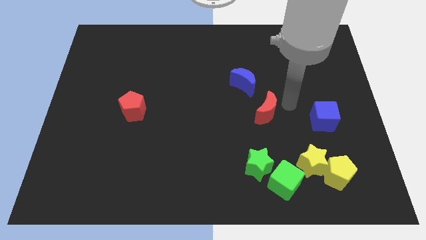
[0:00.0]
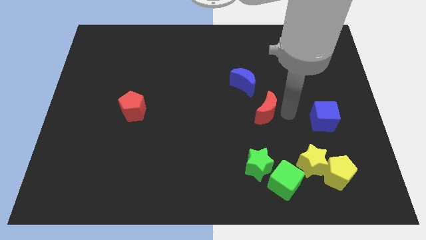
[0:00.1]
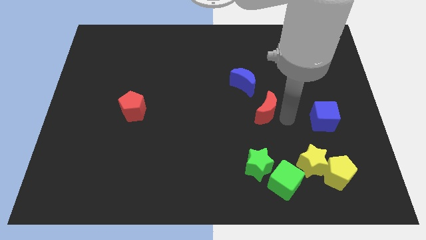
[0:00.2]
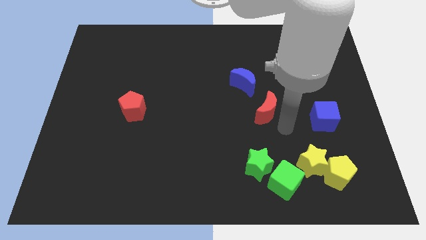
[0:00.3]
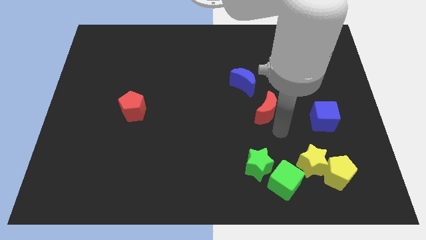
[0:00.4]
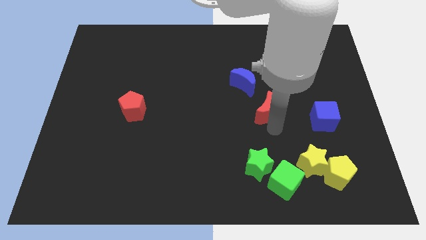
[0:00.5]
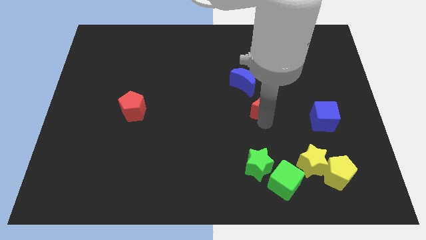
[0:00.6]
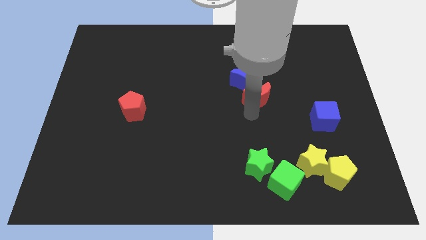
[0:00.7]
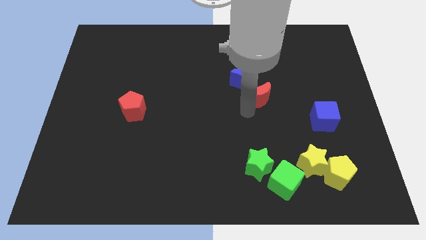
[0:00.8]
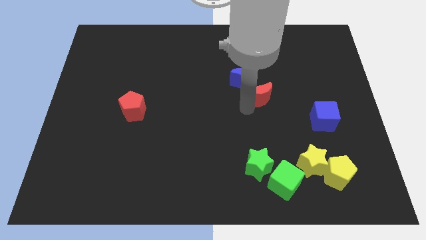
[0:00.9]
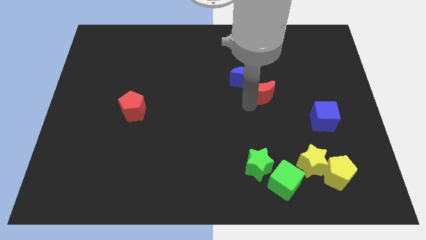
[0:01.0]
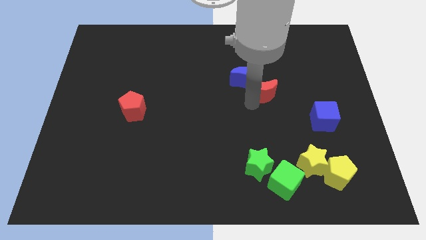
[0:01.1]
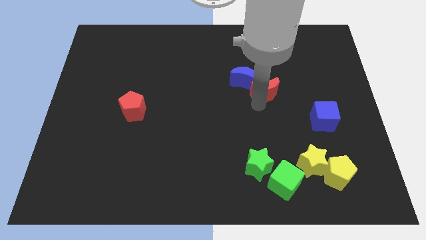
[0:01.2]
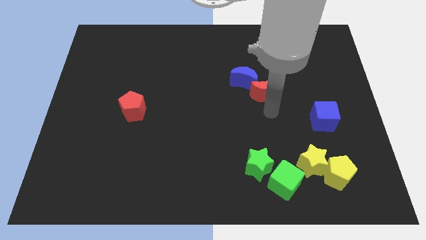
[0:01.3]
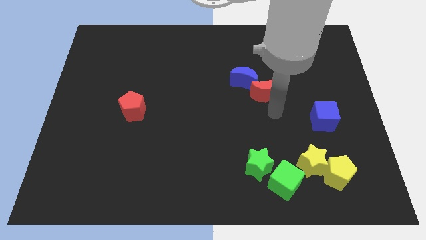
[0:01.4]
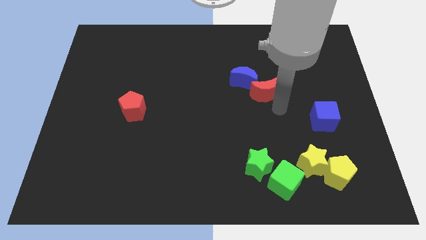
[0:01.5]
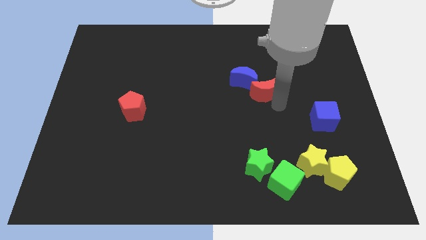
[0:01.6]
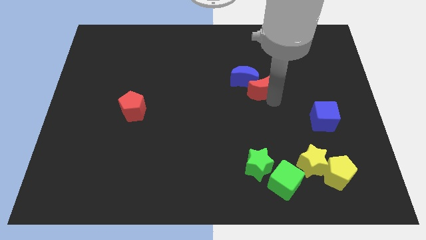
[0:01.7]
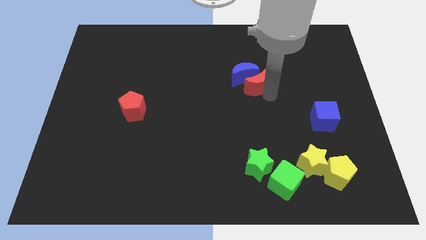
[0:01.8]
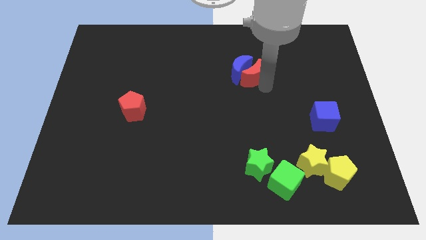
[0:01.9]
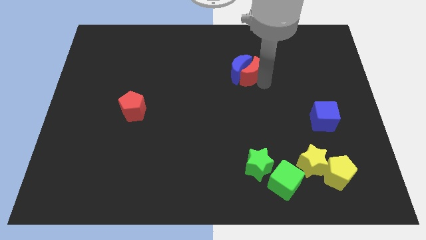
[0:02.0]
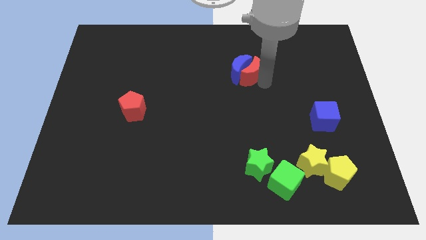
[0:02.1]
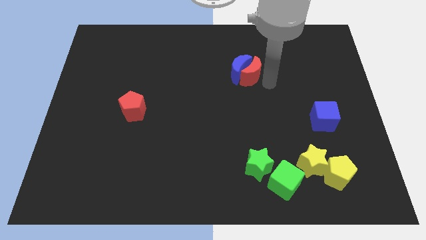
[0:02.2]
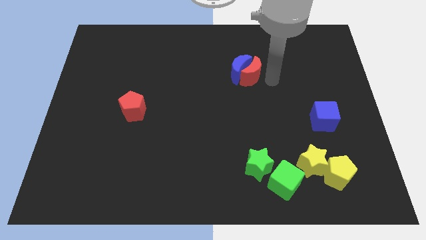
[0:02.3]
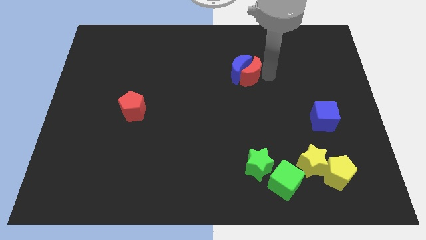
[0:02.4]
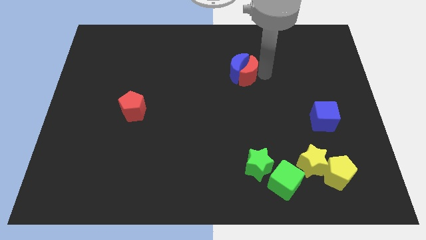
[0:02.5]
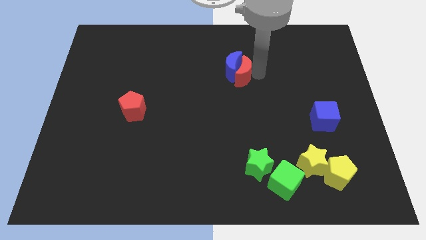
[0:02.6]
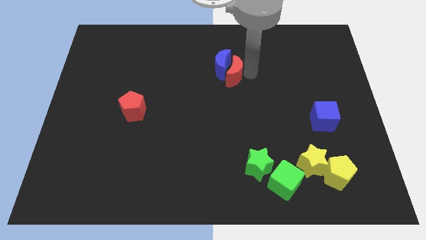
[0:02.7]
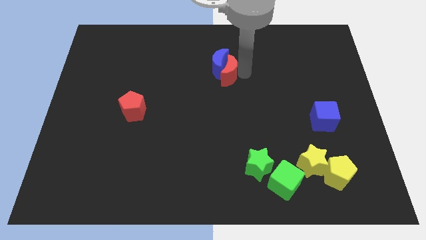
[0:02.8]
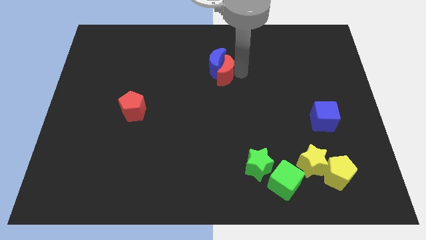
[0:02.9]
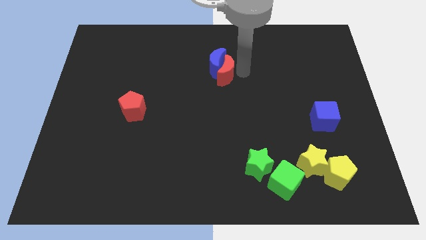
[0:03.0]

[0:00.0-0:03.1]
push the red moon into the blue moon

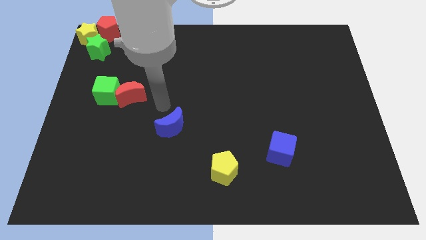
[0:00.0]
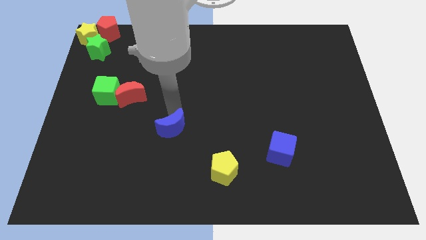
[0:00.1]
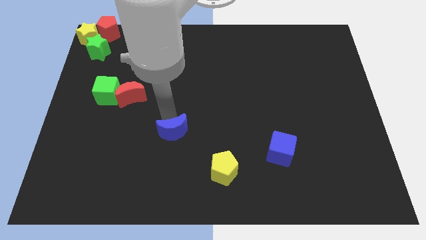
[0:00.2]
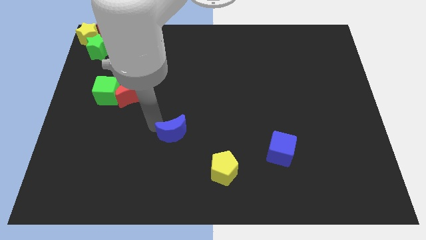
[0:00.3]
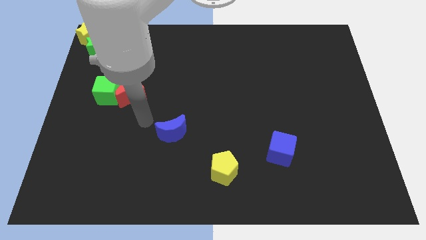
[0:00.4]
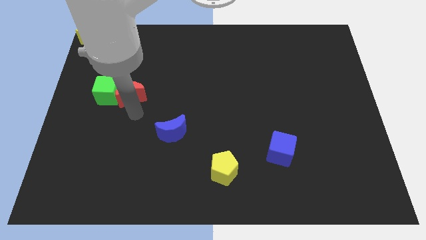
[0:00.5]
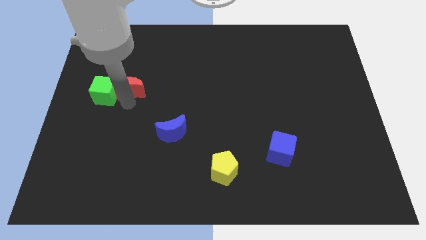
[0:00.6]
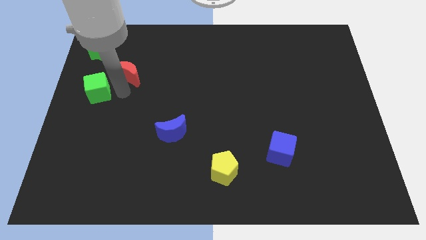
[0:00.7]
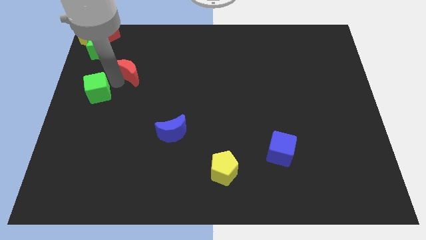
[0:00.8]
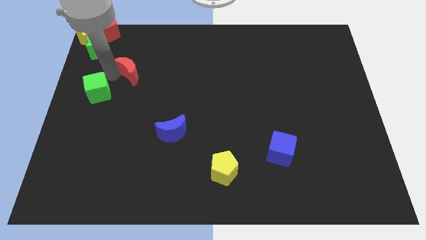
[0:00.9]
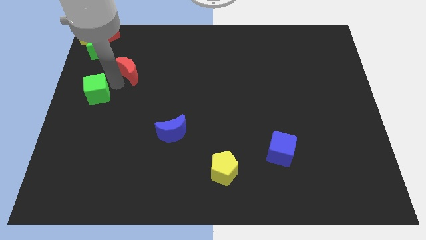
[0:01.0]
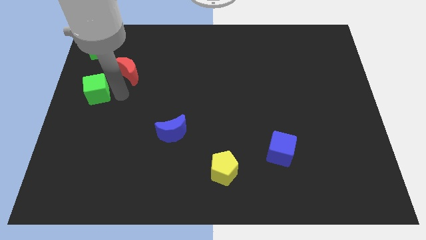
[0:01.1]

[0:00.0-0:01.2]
separate the red moon from the green cube

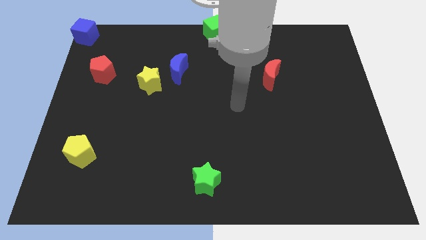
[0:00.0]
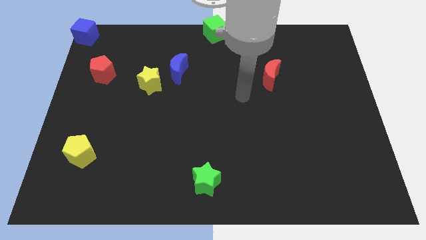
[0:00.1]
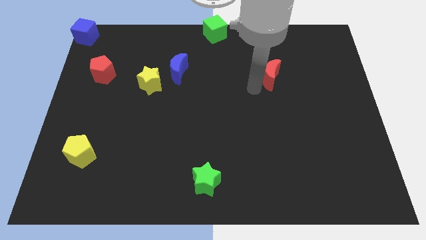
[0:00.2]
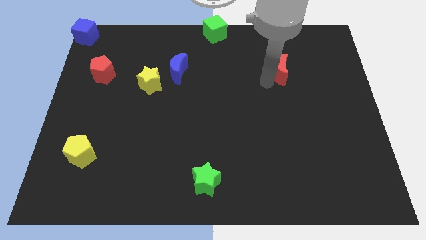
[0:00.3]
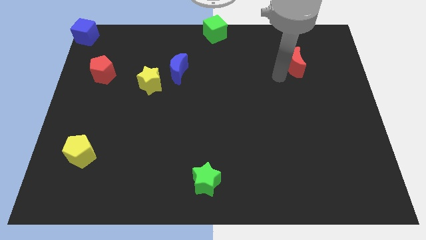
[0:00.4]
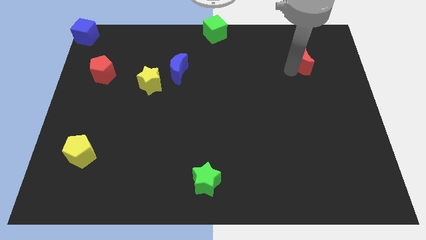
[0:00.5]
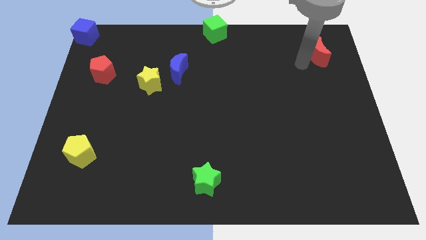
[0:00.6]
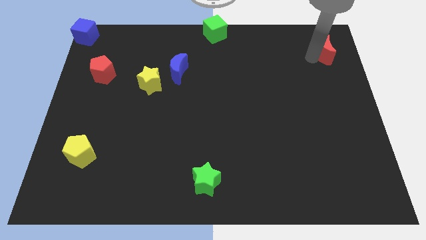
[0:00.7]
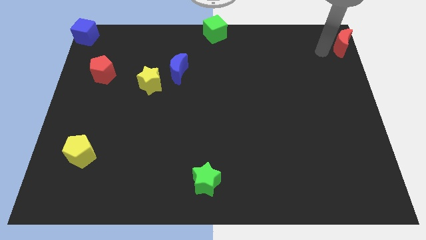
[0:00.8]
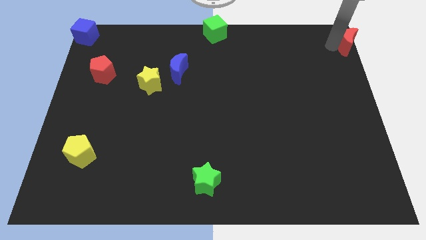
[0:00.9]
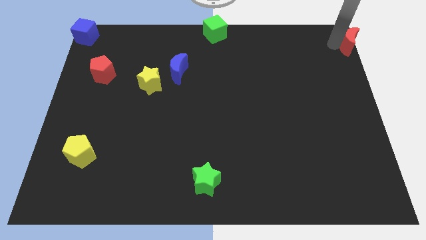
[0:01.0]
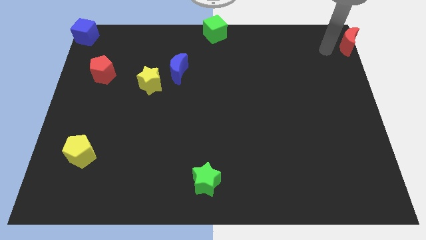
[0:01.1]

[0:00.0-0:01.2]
slide the red moon towards the top right

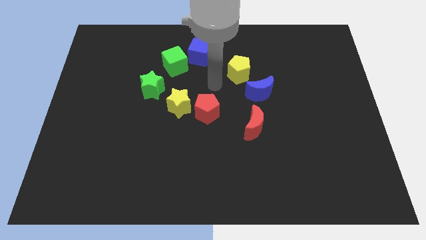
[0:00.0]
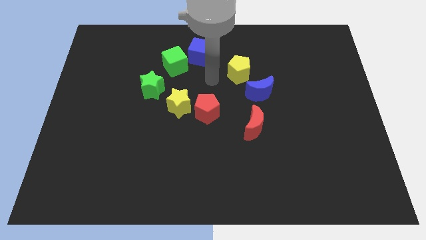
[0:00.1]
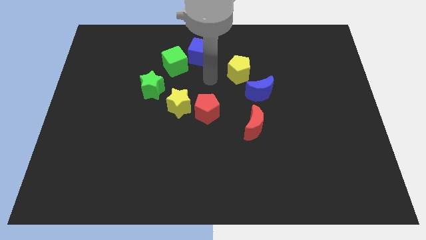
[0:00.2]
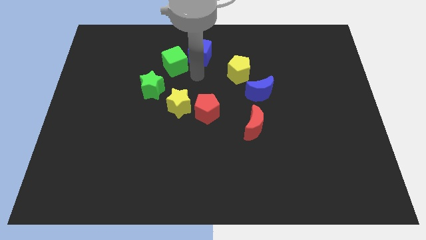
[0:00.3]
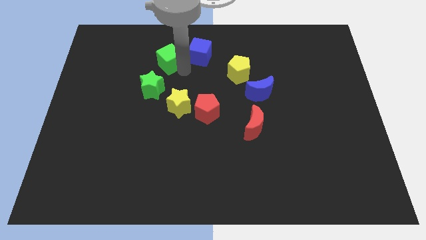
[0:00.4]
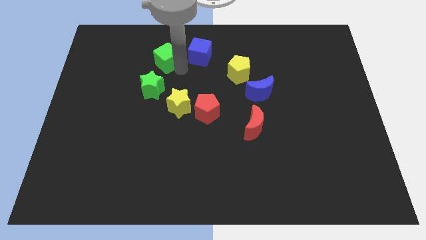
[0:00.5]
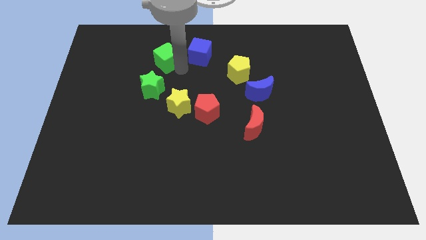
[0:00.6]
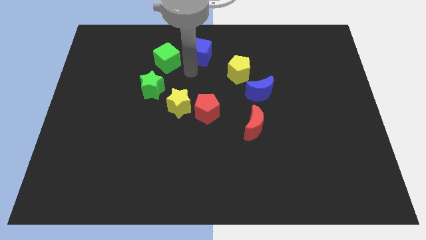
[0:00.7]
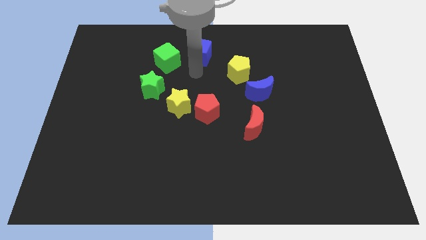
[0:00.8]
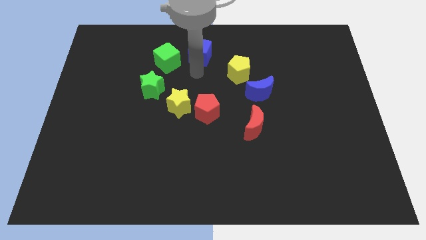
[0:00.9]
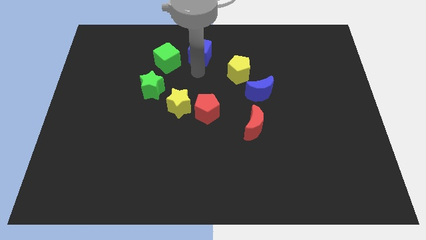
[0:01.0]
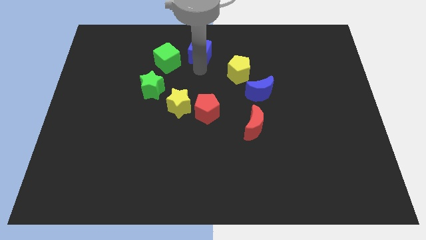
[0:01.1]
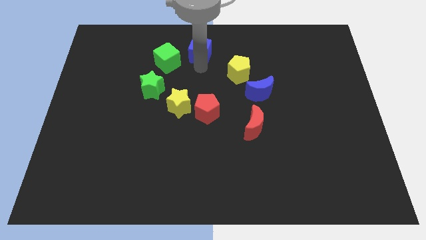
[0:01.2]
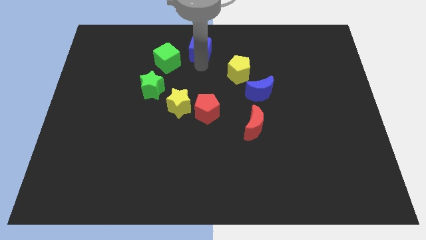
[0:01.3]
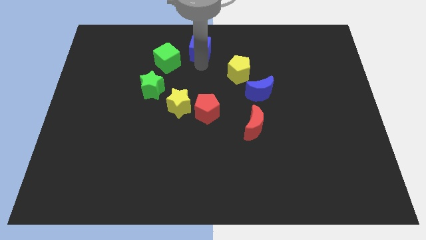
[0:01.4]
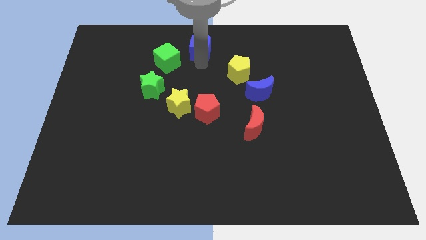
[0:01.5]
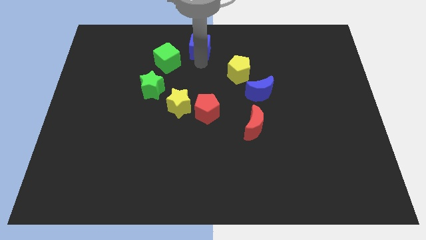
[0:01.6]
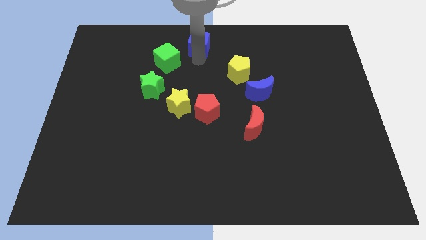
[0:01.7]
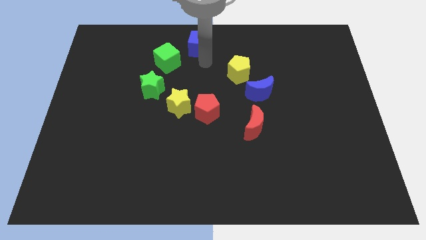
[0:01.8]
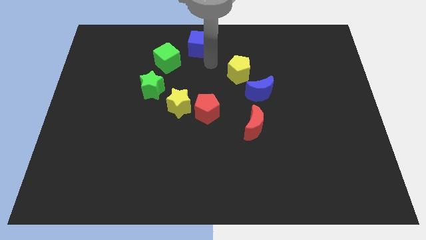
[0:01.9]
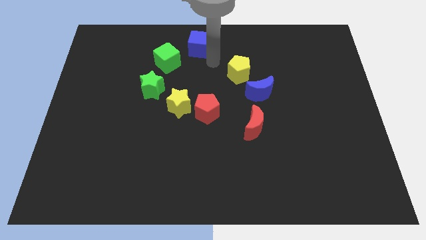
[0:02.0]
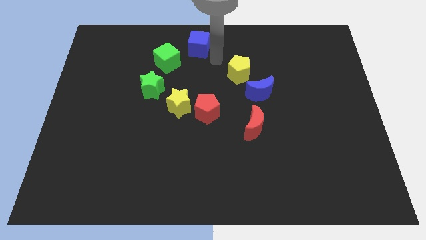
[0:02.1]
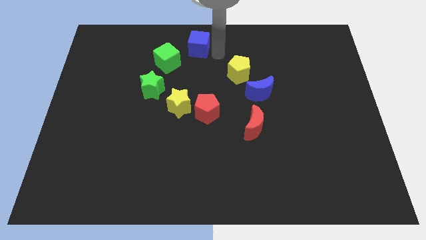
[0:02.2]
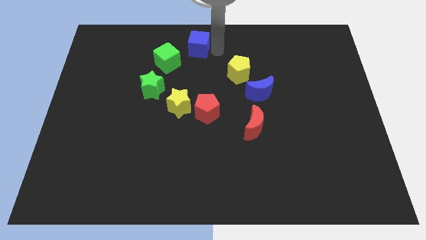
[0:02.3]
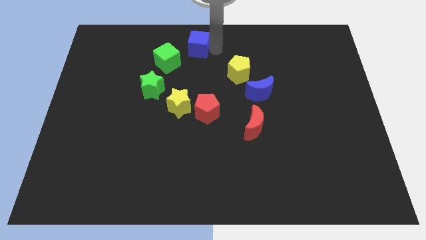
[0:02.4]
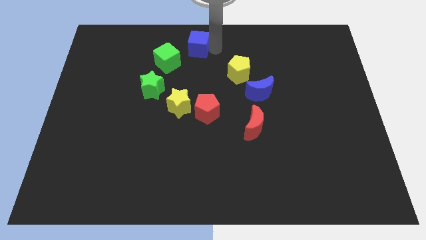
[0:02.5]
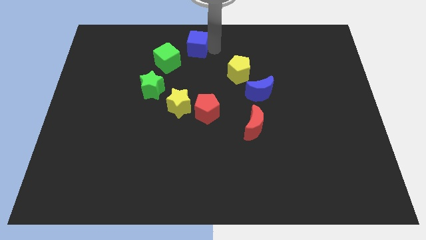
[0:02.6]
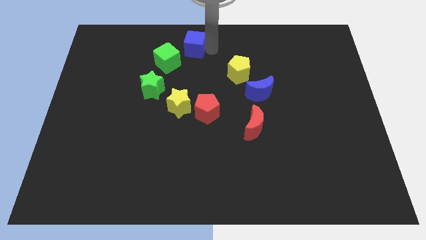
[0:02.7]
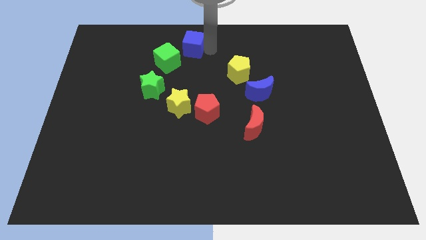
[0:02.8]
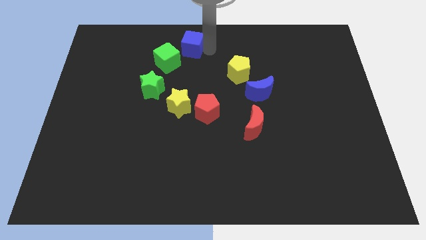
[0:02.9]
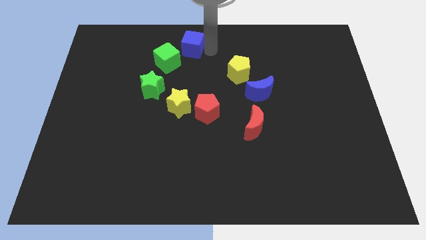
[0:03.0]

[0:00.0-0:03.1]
move the blue cube at the top center

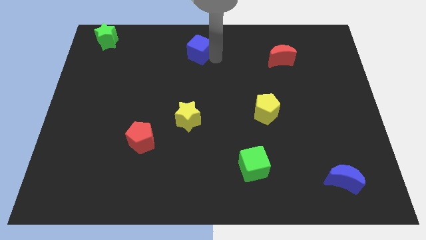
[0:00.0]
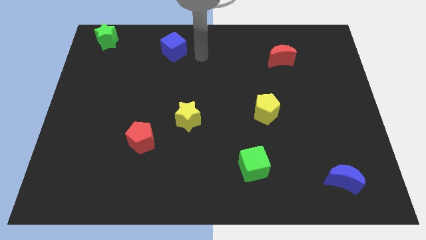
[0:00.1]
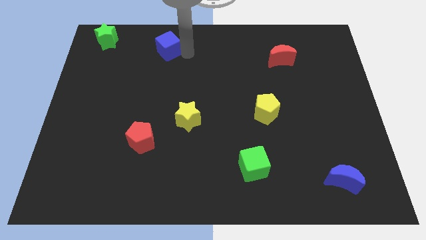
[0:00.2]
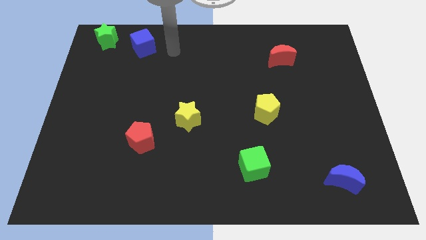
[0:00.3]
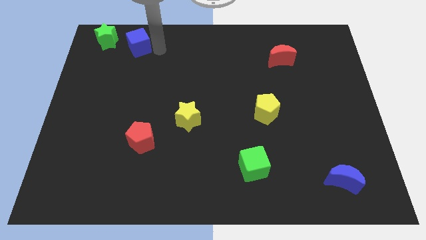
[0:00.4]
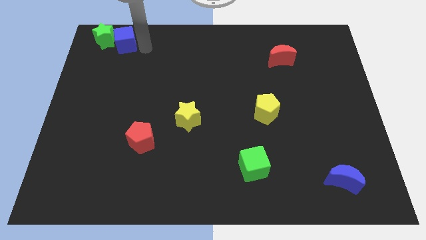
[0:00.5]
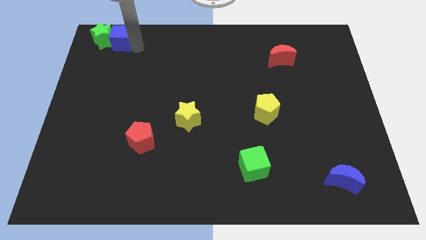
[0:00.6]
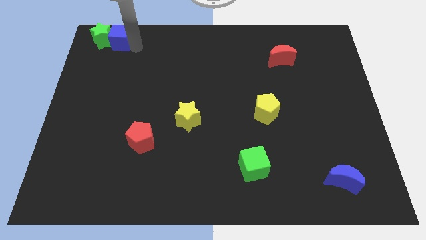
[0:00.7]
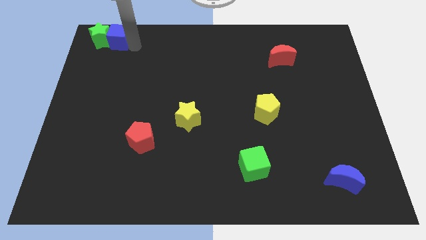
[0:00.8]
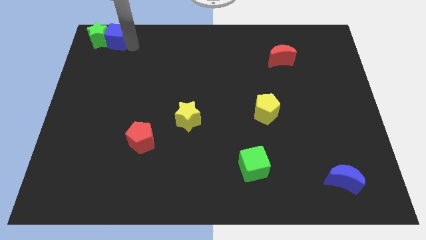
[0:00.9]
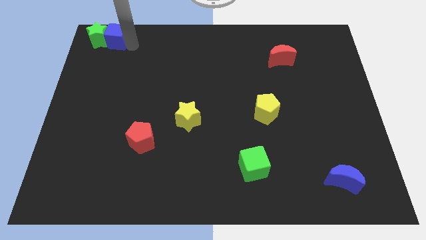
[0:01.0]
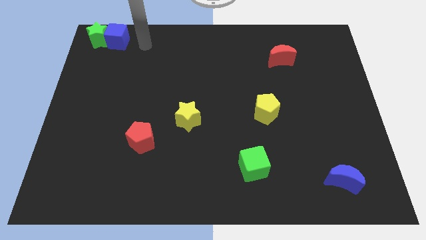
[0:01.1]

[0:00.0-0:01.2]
push blue cube into green star
